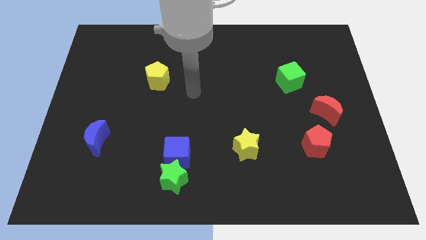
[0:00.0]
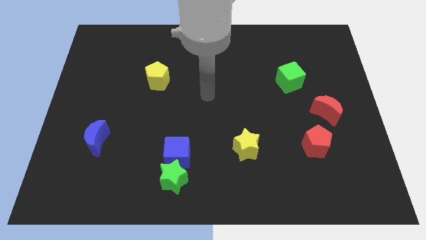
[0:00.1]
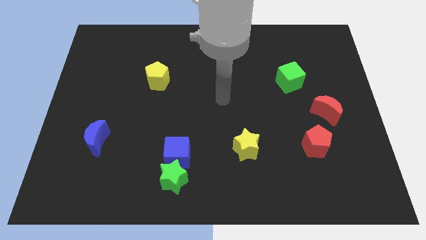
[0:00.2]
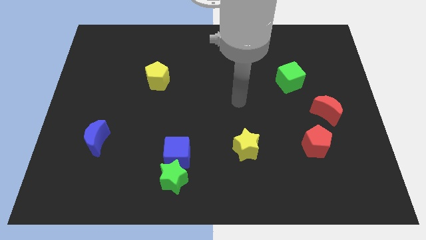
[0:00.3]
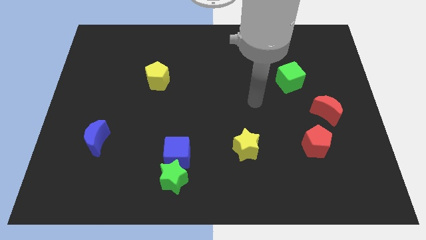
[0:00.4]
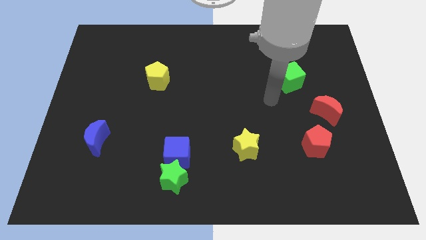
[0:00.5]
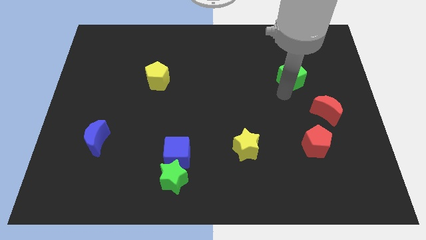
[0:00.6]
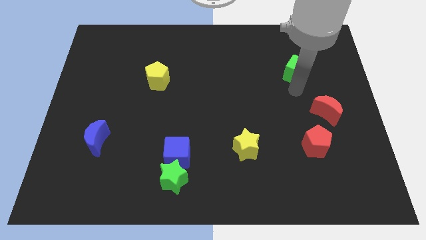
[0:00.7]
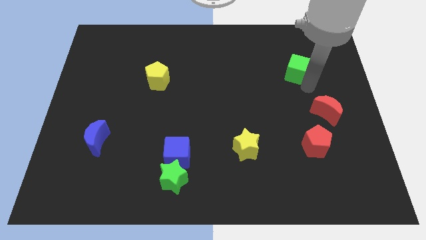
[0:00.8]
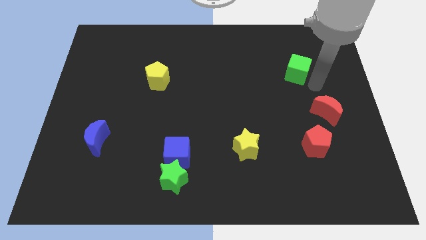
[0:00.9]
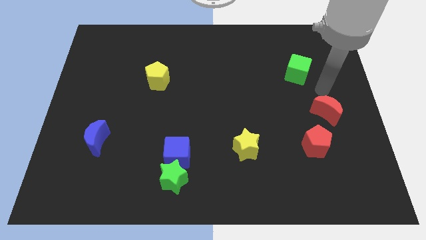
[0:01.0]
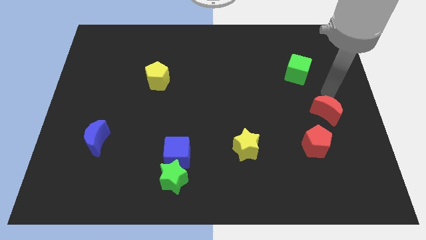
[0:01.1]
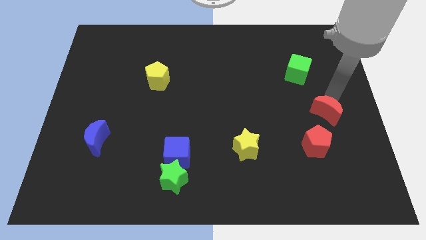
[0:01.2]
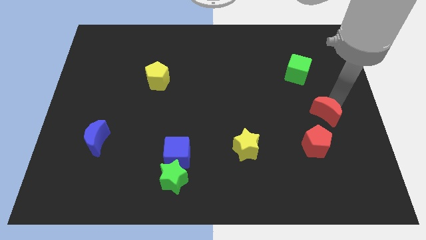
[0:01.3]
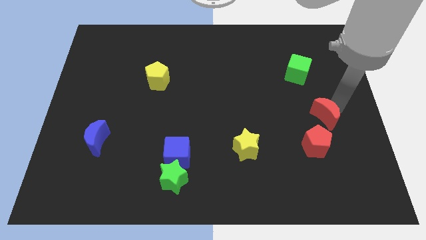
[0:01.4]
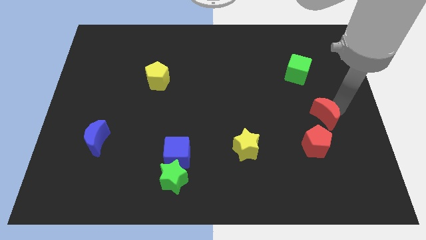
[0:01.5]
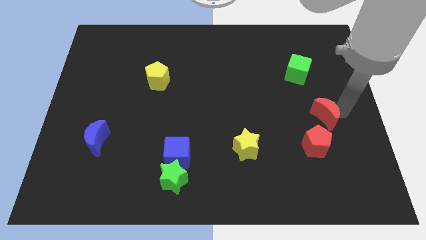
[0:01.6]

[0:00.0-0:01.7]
move your arm at the right side of the red moon

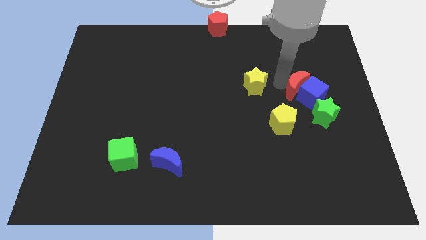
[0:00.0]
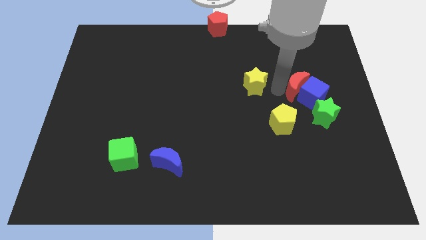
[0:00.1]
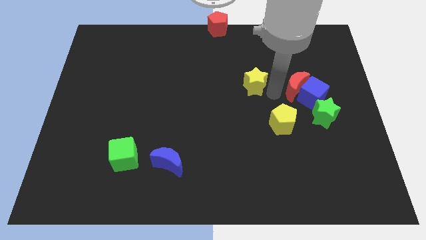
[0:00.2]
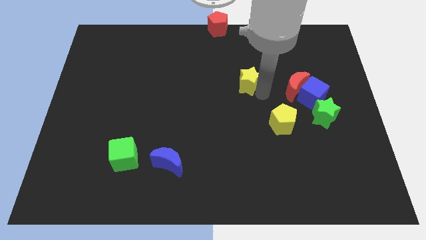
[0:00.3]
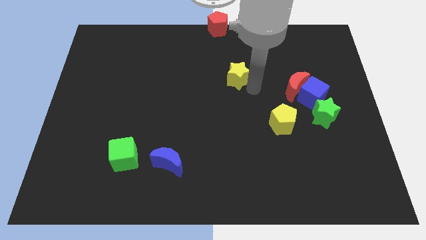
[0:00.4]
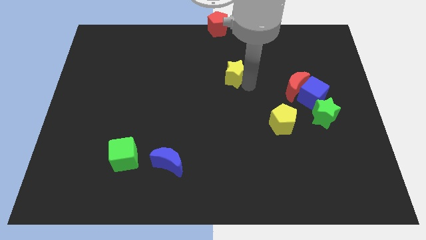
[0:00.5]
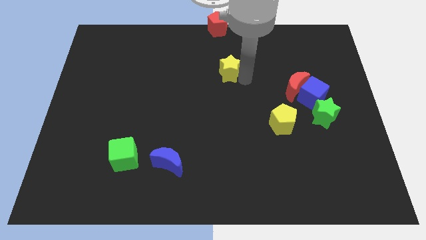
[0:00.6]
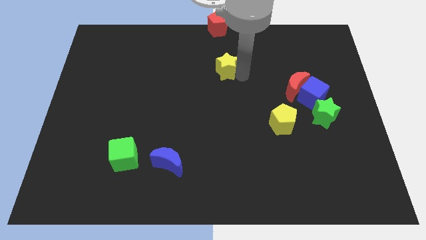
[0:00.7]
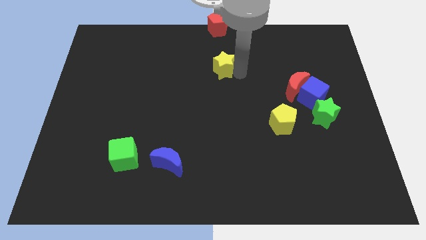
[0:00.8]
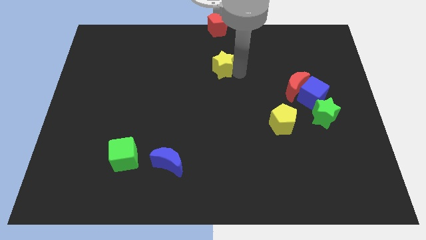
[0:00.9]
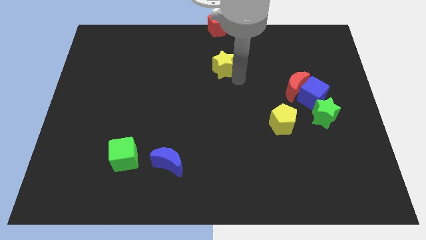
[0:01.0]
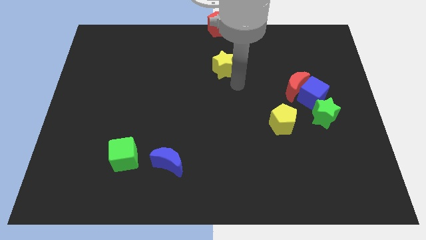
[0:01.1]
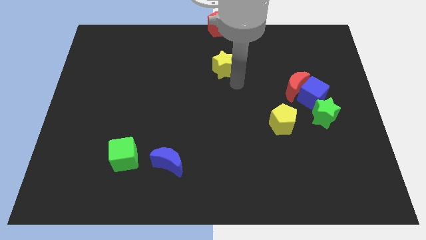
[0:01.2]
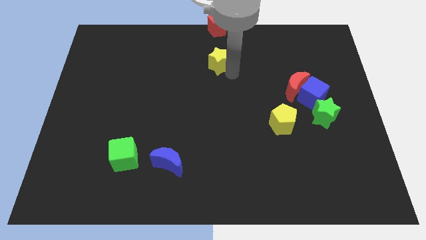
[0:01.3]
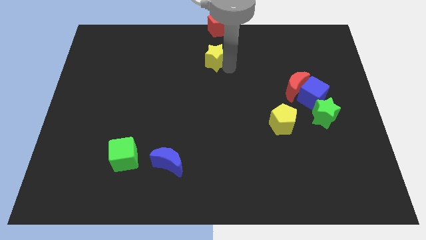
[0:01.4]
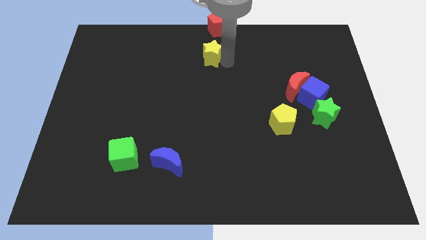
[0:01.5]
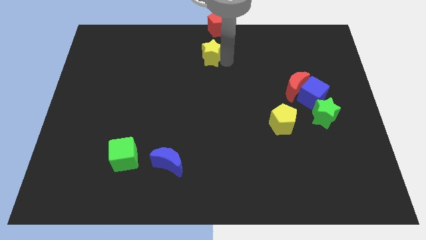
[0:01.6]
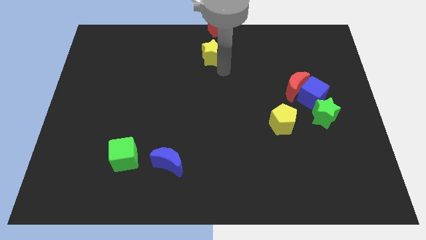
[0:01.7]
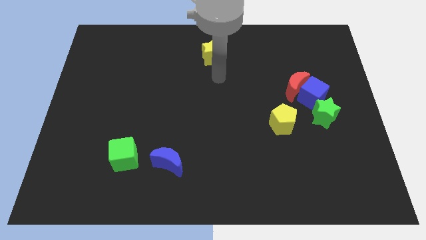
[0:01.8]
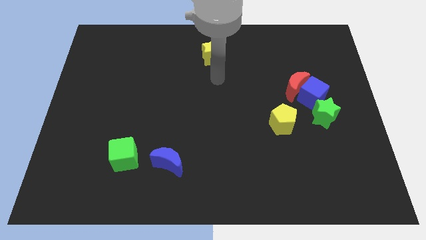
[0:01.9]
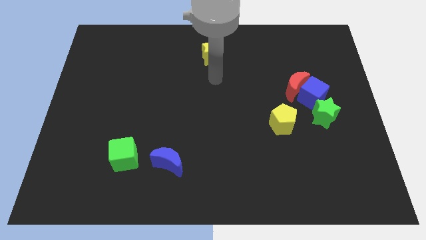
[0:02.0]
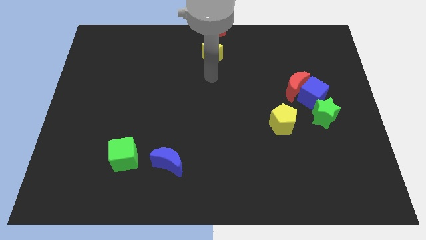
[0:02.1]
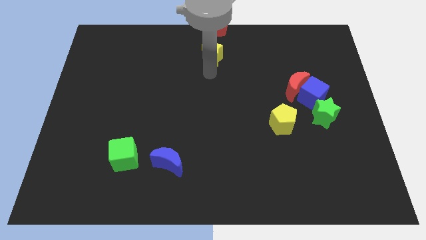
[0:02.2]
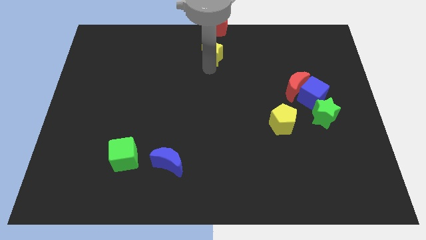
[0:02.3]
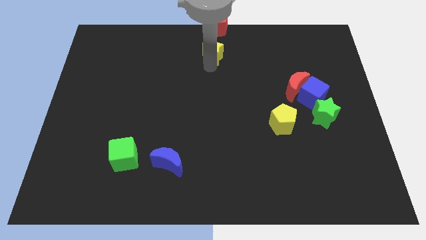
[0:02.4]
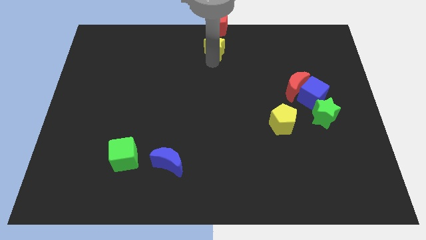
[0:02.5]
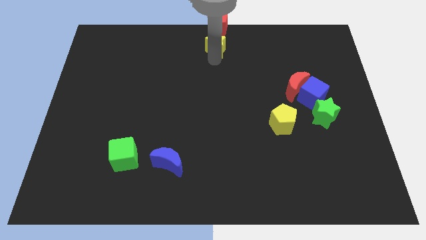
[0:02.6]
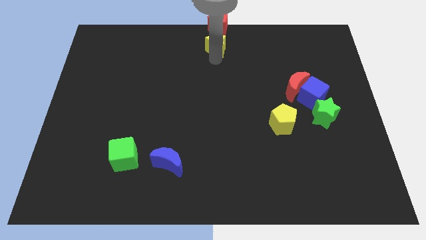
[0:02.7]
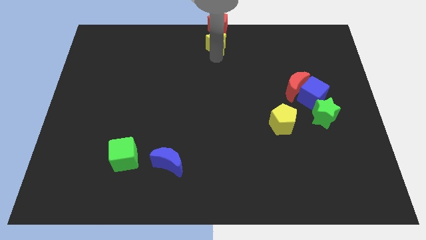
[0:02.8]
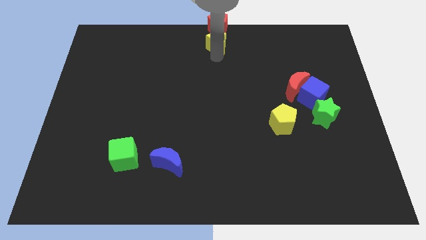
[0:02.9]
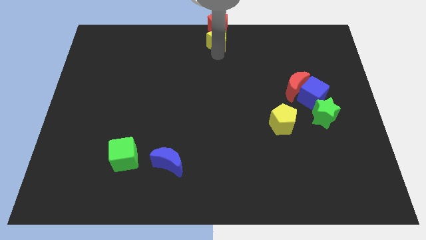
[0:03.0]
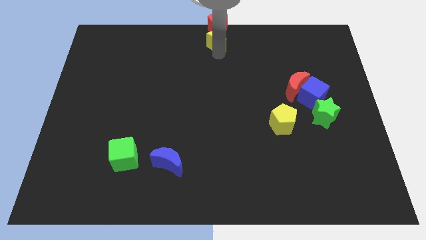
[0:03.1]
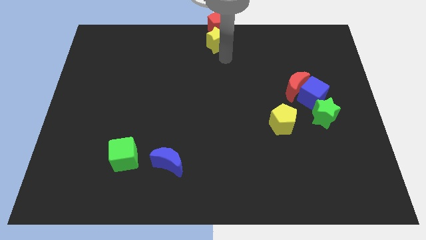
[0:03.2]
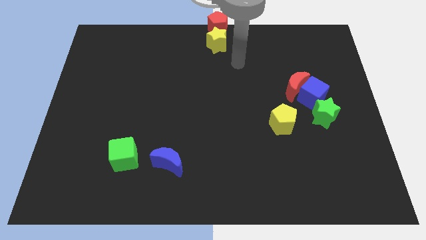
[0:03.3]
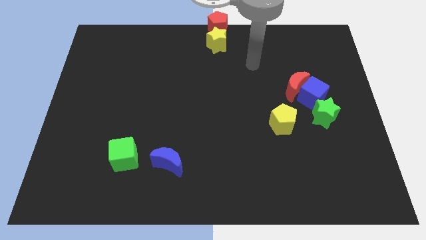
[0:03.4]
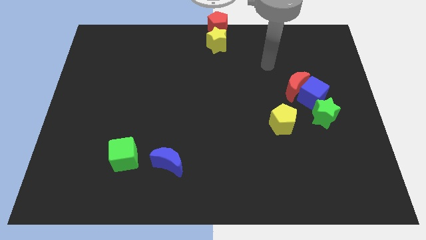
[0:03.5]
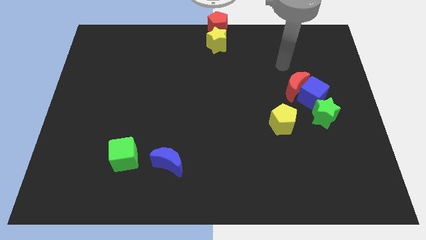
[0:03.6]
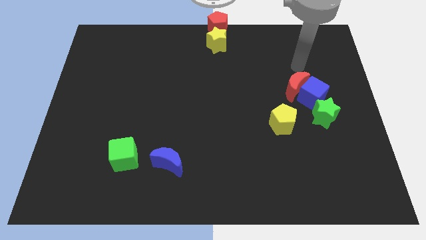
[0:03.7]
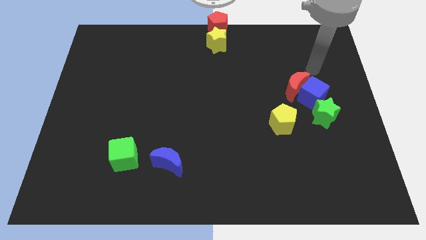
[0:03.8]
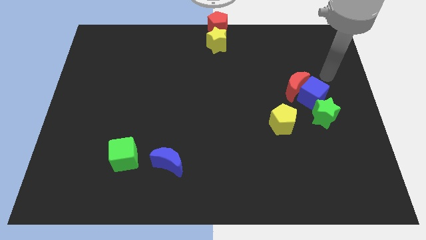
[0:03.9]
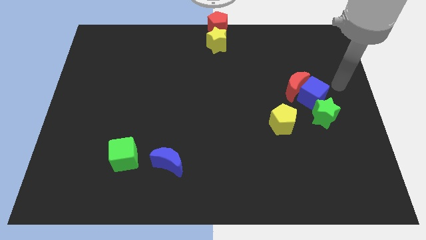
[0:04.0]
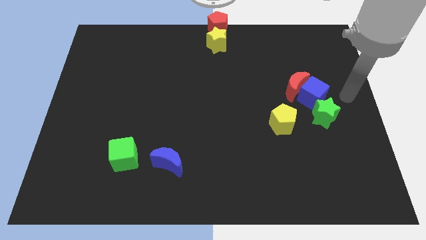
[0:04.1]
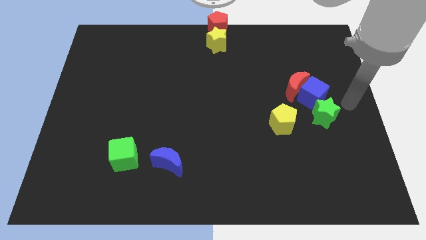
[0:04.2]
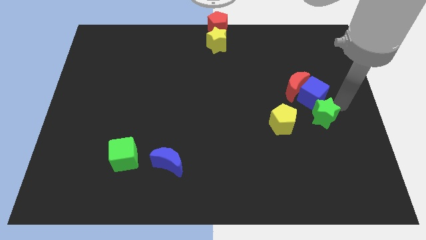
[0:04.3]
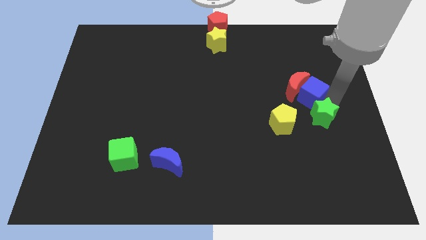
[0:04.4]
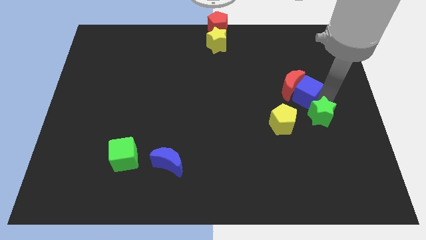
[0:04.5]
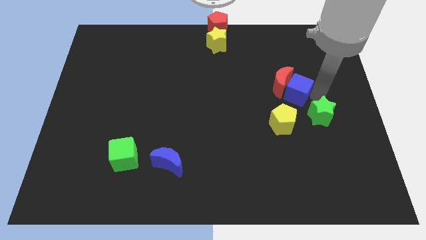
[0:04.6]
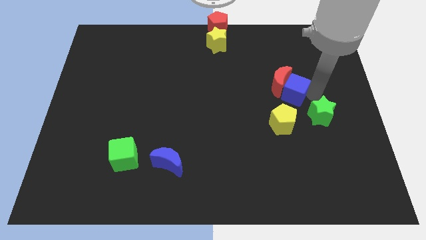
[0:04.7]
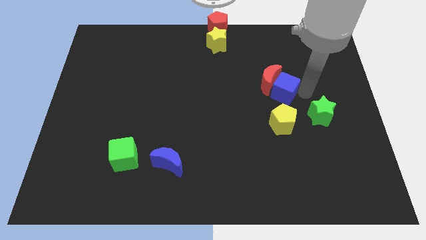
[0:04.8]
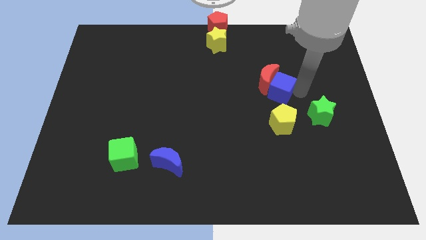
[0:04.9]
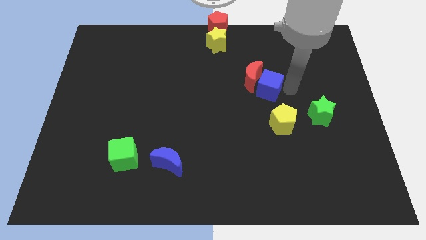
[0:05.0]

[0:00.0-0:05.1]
push the yellow star into the red pentagon

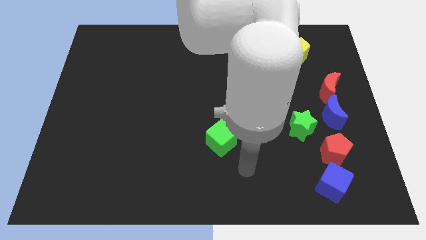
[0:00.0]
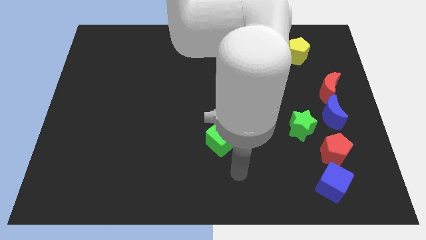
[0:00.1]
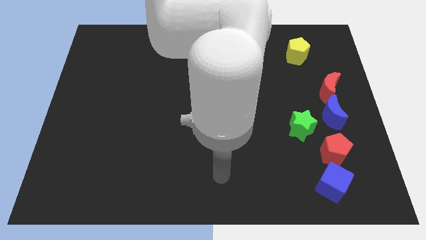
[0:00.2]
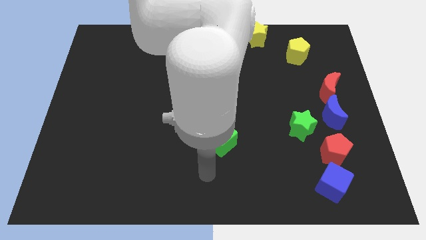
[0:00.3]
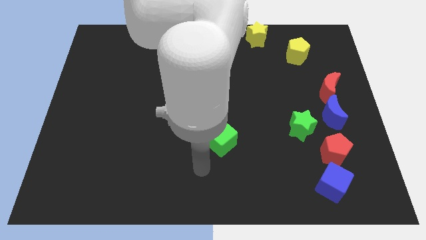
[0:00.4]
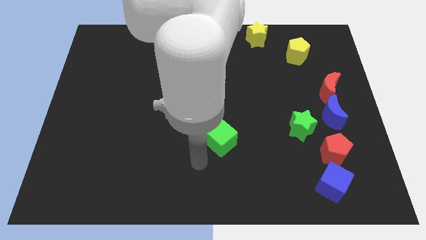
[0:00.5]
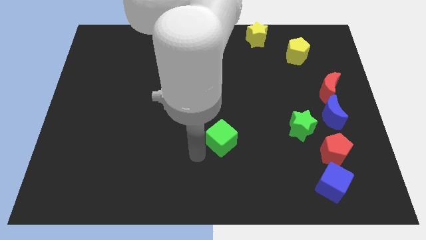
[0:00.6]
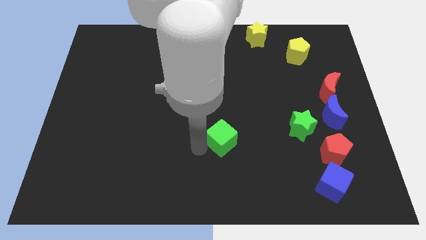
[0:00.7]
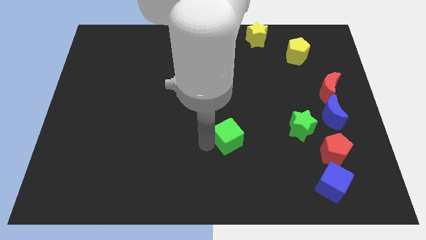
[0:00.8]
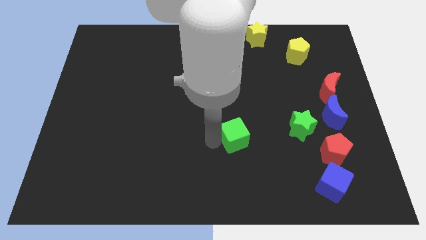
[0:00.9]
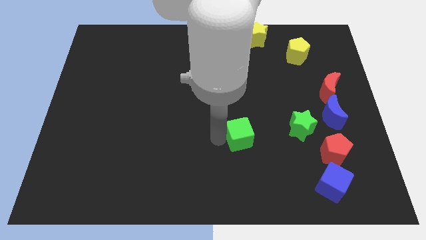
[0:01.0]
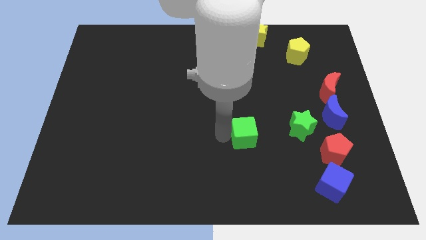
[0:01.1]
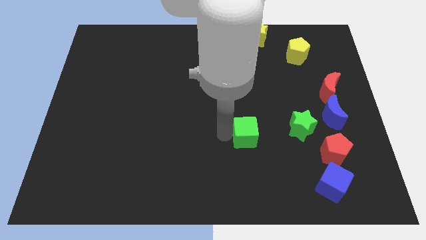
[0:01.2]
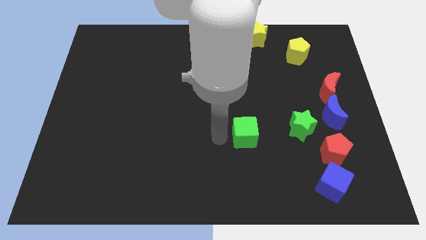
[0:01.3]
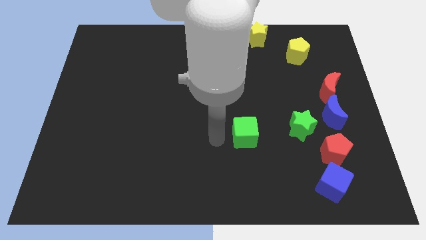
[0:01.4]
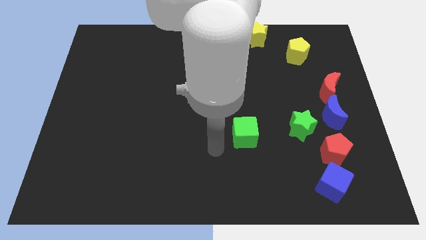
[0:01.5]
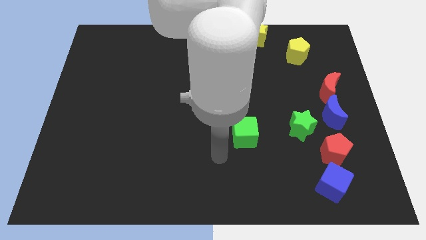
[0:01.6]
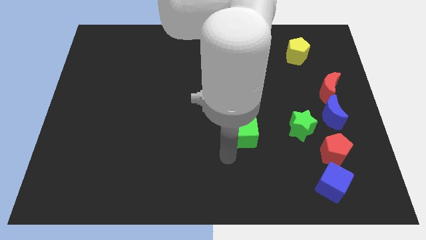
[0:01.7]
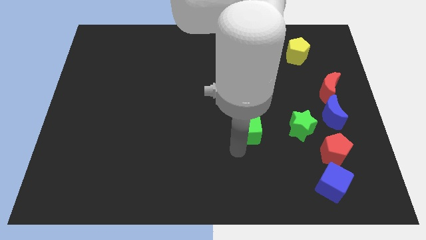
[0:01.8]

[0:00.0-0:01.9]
put the green cube parallel left to the green star

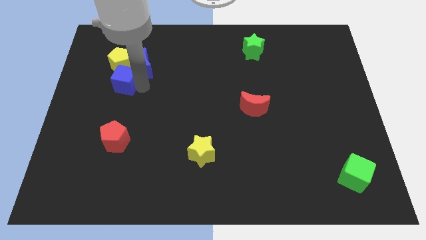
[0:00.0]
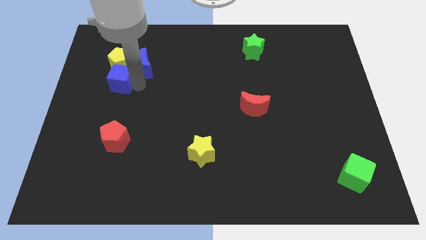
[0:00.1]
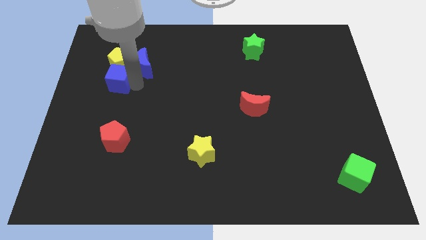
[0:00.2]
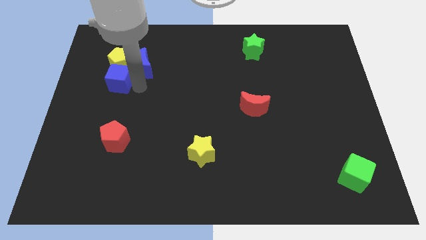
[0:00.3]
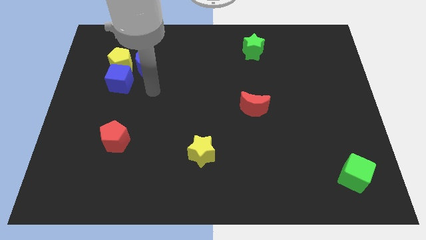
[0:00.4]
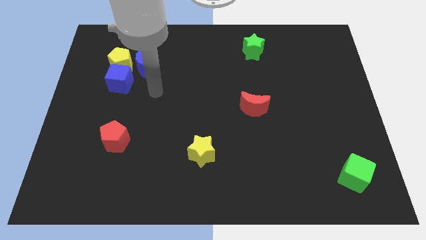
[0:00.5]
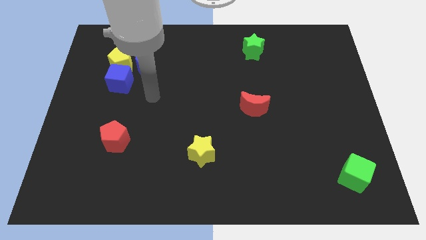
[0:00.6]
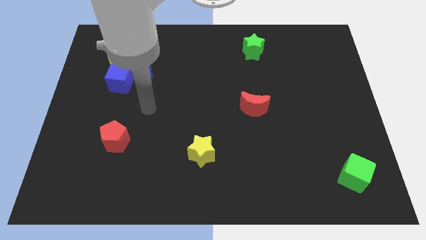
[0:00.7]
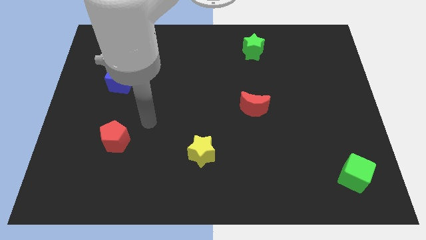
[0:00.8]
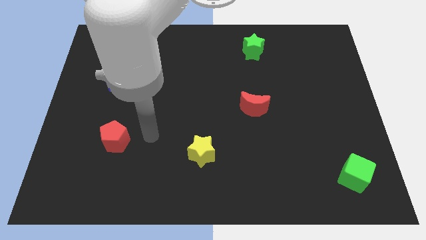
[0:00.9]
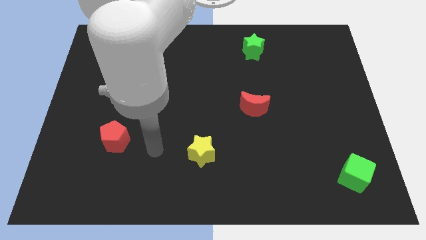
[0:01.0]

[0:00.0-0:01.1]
move your arm away from blue cube
